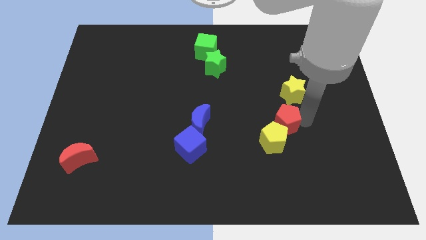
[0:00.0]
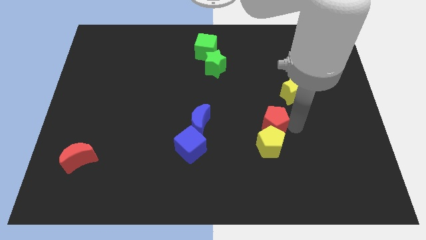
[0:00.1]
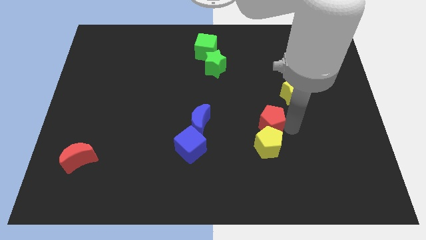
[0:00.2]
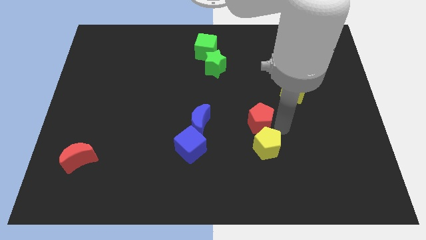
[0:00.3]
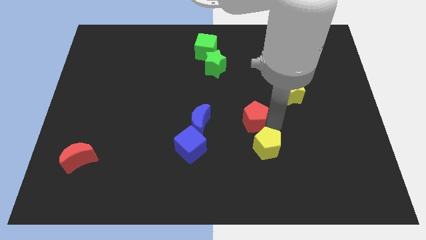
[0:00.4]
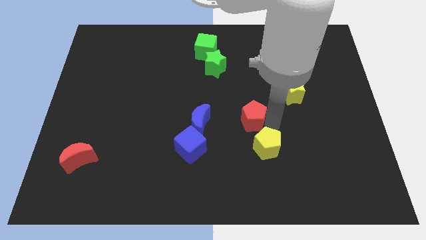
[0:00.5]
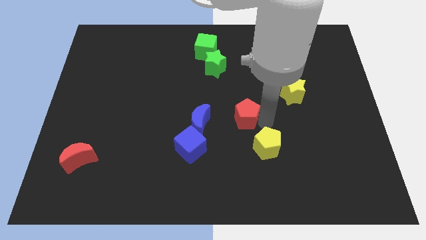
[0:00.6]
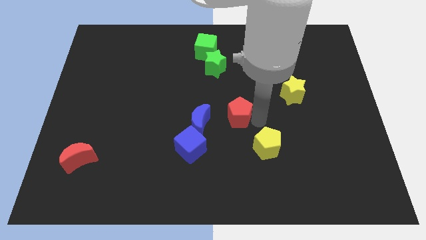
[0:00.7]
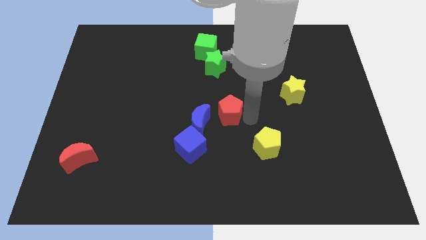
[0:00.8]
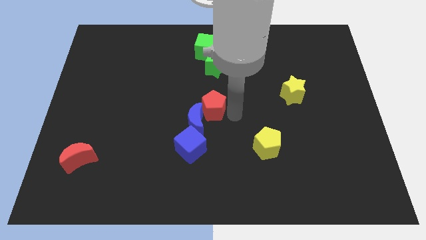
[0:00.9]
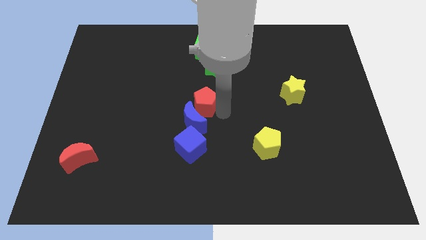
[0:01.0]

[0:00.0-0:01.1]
push the red pentagon to the top of the blue crescent

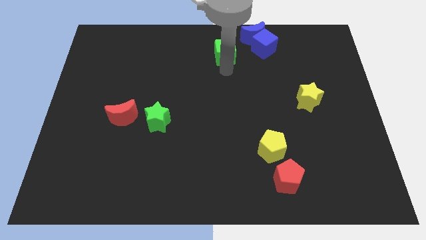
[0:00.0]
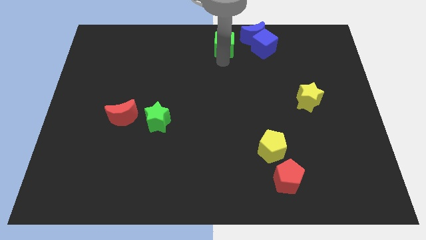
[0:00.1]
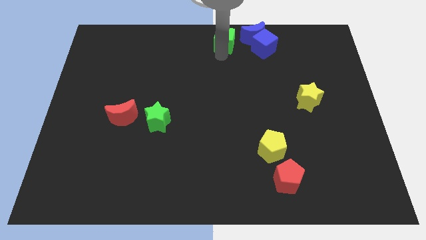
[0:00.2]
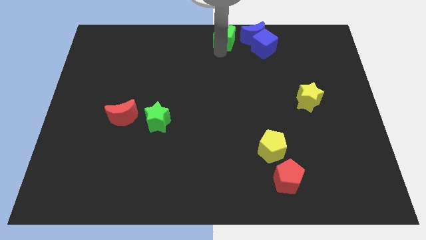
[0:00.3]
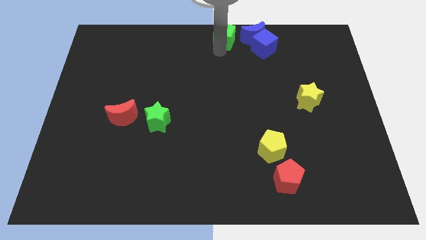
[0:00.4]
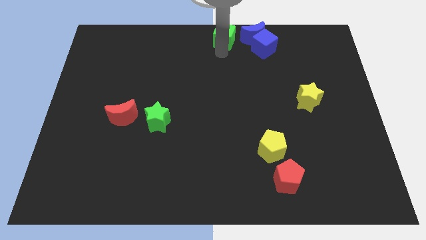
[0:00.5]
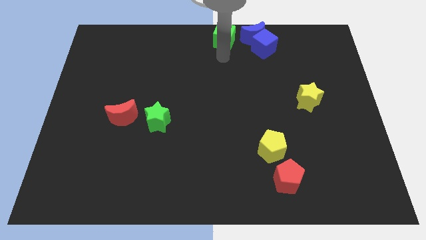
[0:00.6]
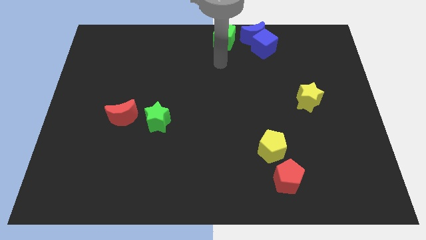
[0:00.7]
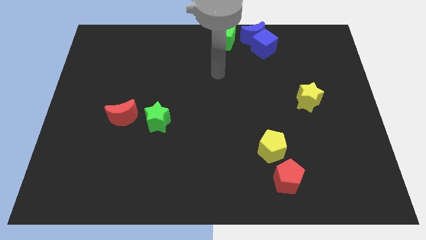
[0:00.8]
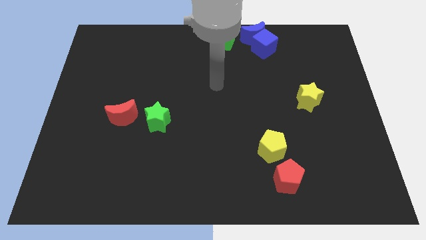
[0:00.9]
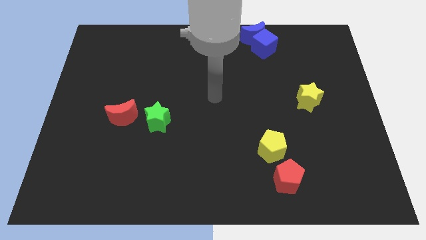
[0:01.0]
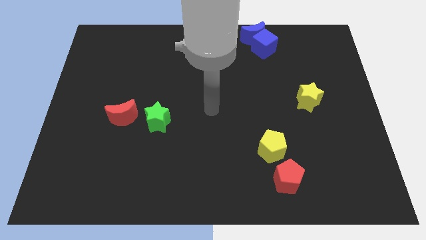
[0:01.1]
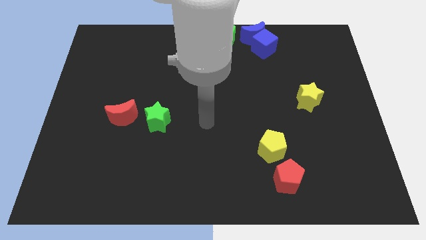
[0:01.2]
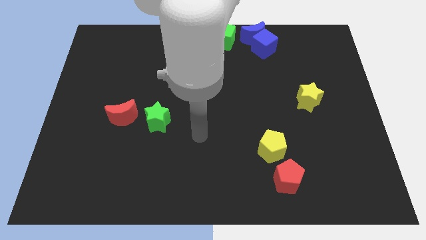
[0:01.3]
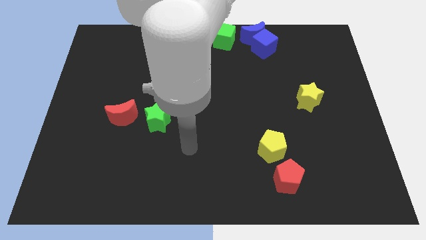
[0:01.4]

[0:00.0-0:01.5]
place the green cube to the left of blue moon

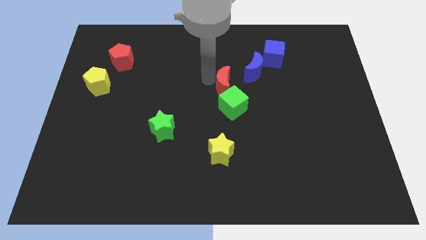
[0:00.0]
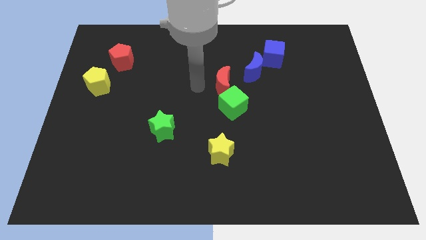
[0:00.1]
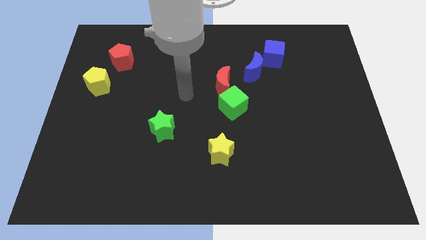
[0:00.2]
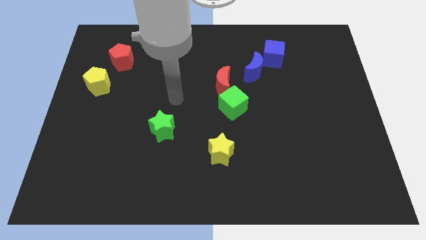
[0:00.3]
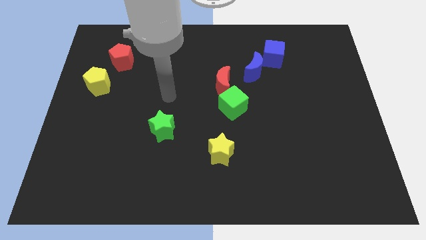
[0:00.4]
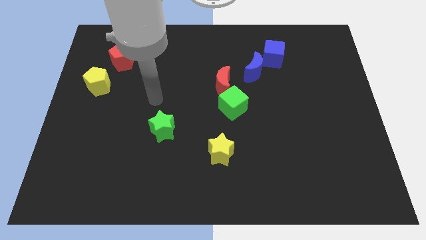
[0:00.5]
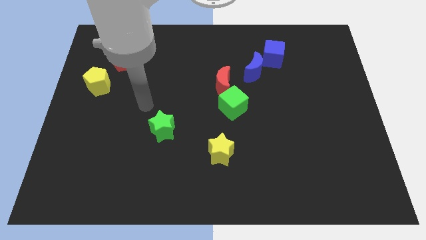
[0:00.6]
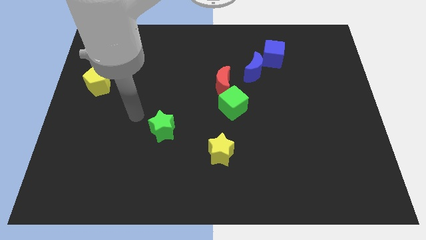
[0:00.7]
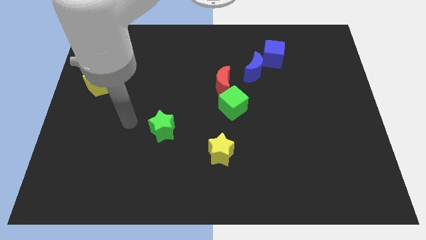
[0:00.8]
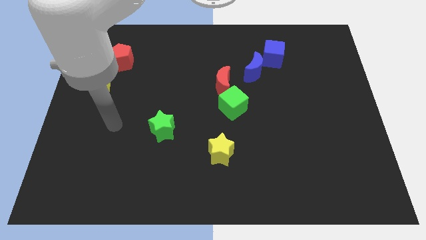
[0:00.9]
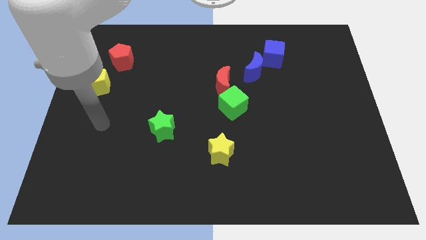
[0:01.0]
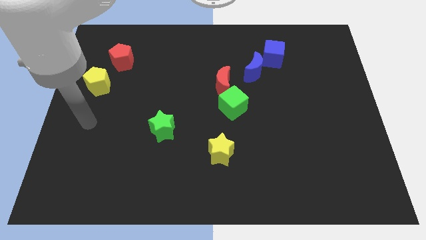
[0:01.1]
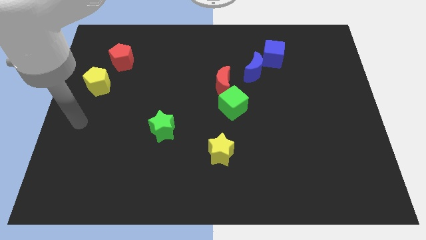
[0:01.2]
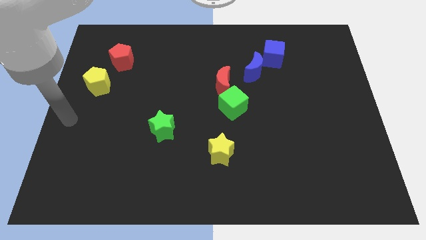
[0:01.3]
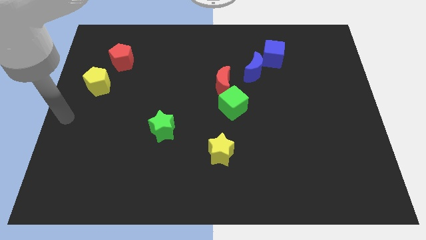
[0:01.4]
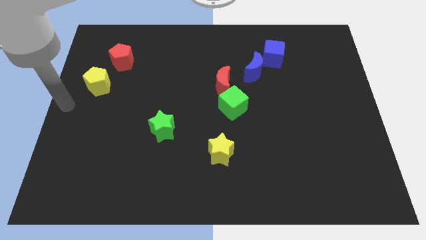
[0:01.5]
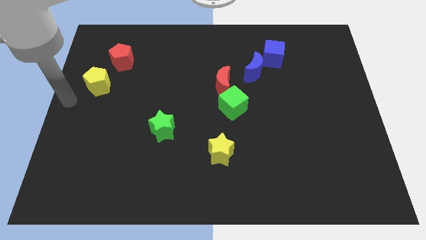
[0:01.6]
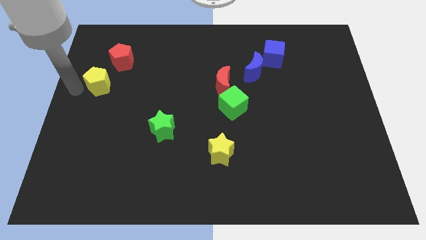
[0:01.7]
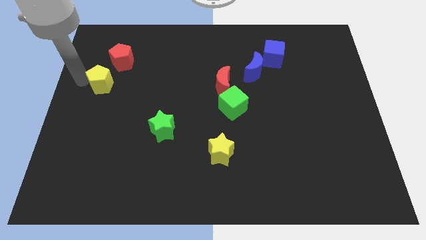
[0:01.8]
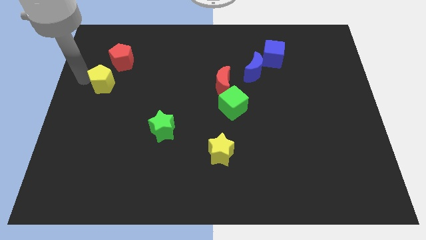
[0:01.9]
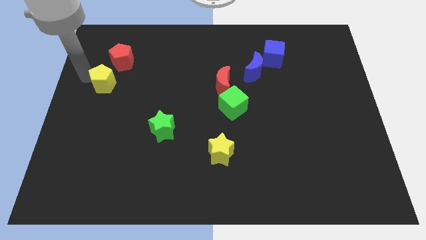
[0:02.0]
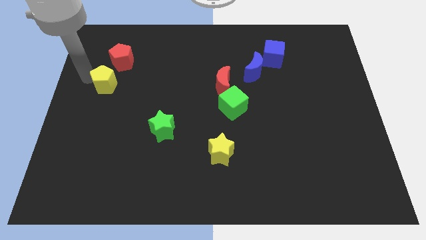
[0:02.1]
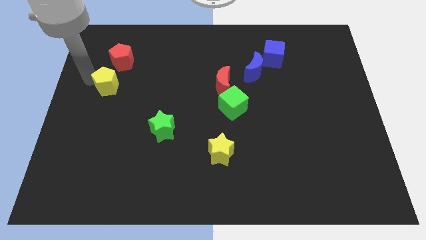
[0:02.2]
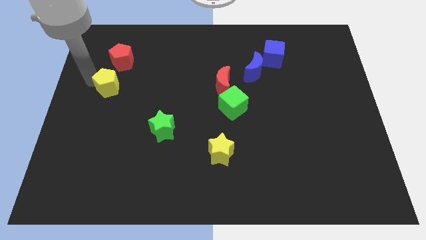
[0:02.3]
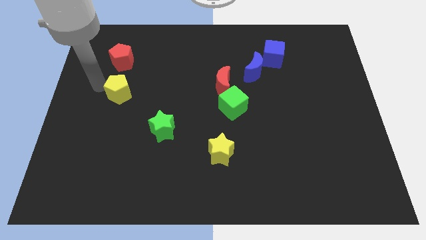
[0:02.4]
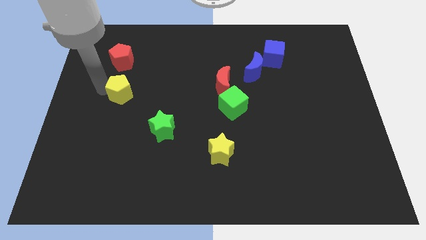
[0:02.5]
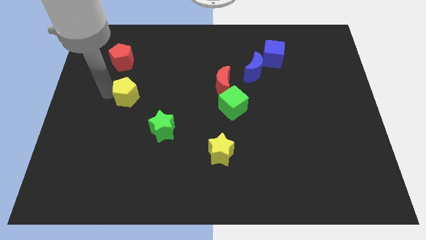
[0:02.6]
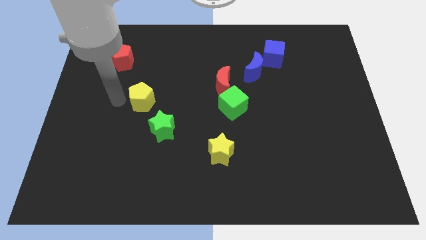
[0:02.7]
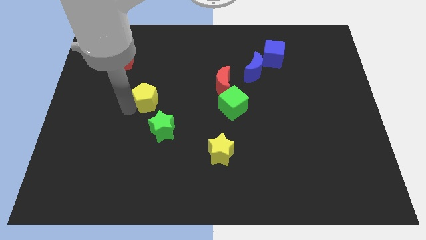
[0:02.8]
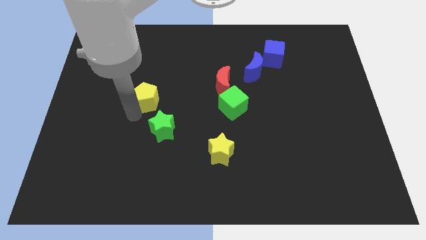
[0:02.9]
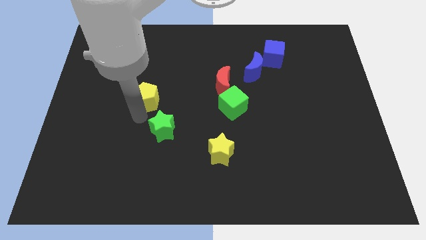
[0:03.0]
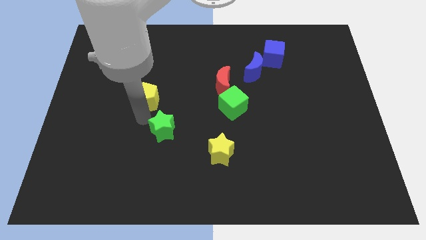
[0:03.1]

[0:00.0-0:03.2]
place yellow pentagon to the top left of green star

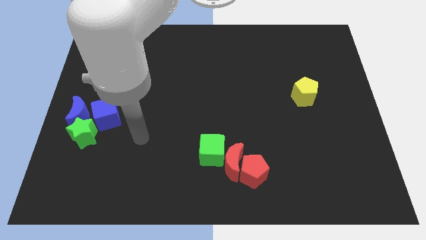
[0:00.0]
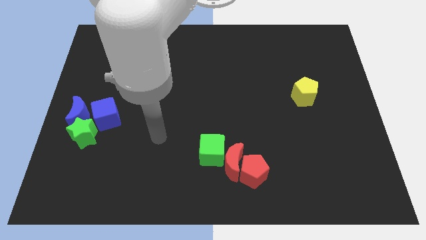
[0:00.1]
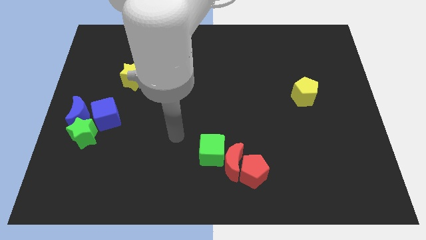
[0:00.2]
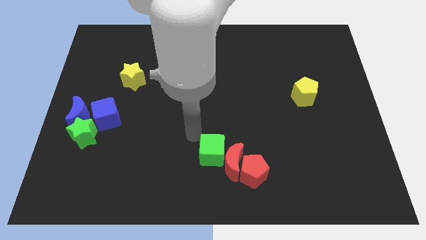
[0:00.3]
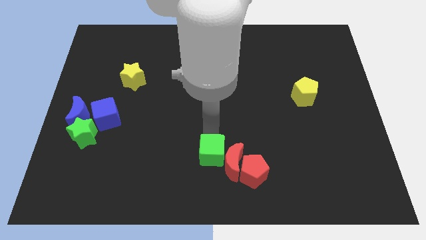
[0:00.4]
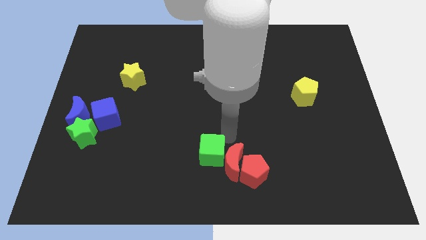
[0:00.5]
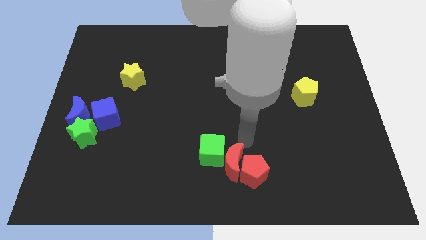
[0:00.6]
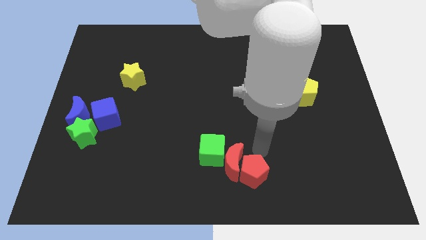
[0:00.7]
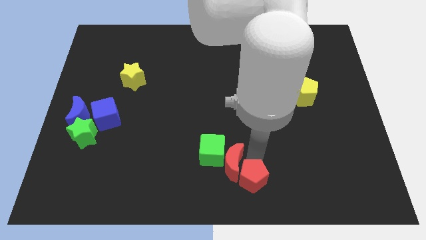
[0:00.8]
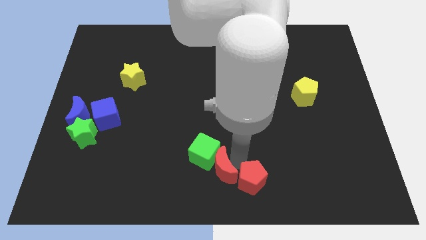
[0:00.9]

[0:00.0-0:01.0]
slightly push the red pentagon downwards of the board

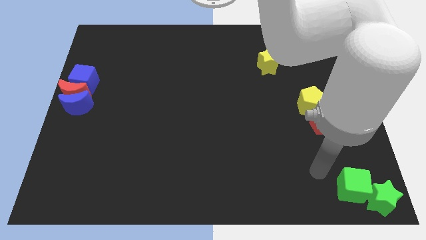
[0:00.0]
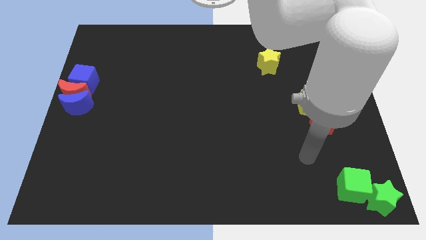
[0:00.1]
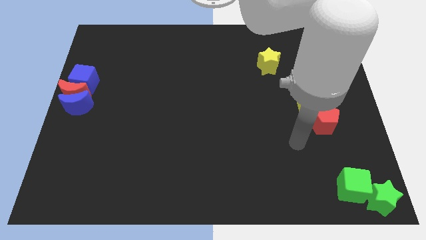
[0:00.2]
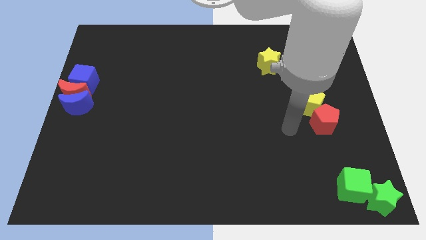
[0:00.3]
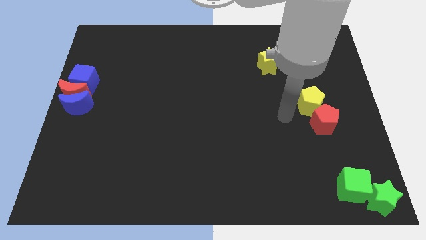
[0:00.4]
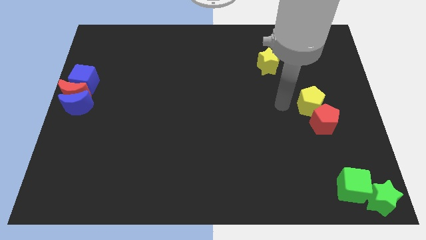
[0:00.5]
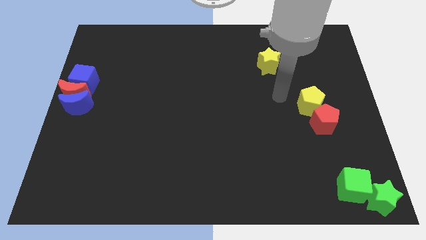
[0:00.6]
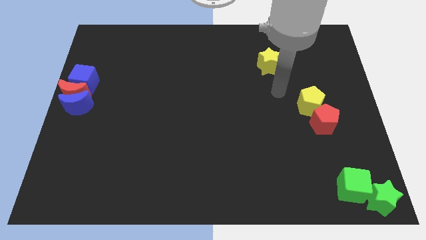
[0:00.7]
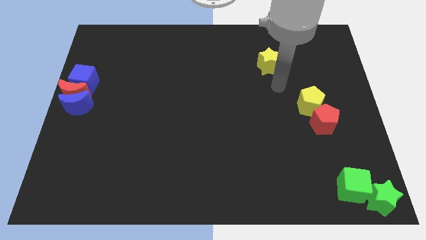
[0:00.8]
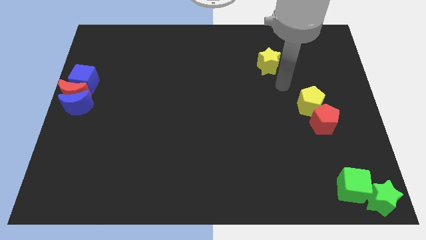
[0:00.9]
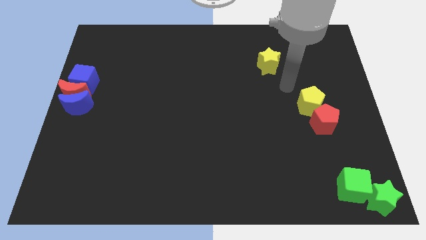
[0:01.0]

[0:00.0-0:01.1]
move the arm towards the top left of the yellow pentagon

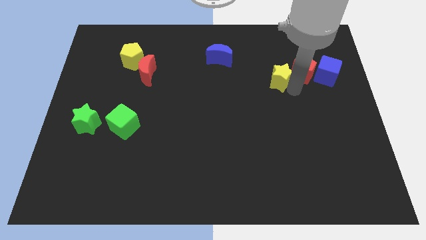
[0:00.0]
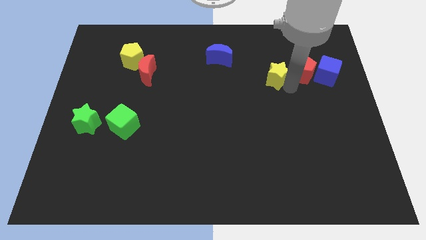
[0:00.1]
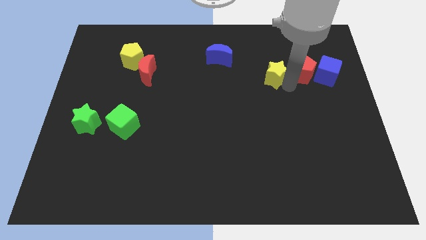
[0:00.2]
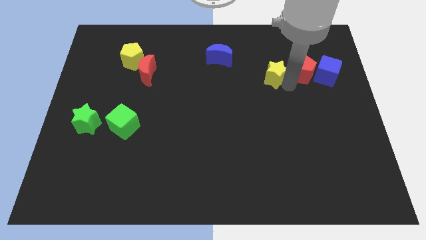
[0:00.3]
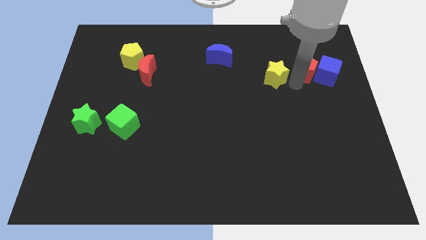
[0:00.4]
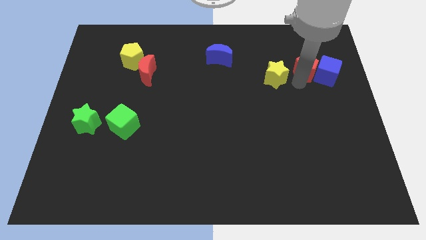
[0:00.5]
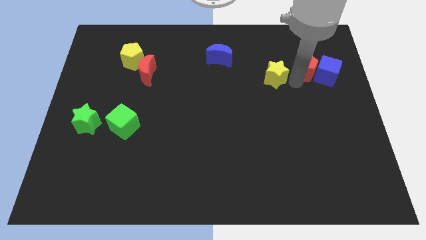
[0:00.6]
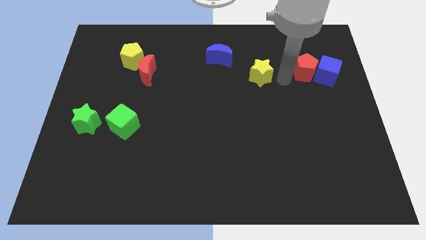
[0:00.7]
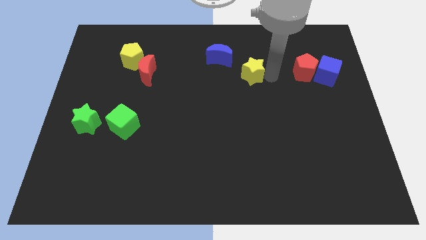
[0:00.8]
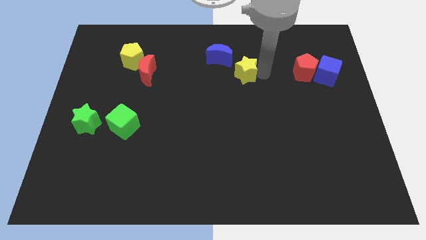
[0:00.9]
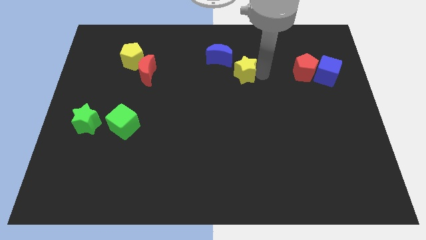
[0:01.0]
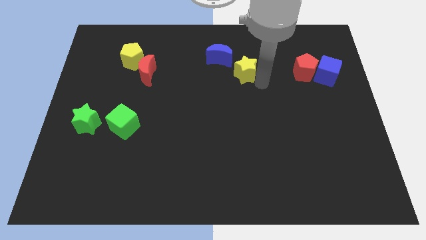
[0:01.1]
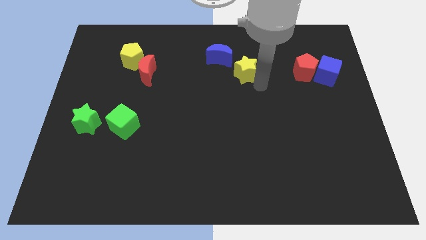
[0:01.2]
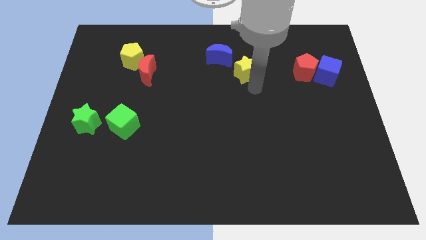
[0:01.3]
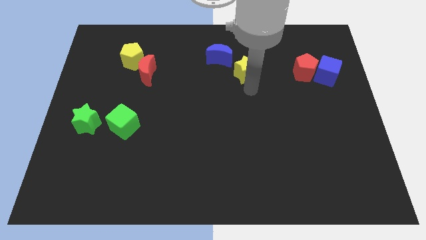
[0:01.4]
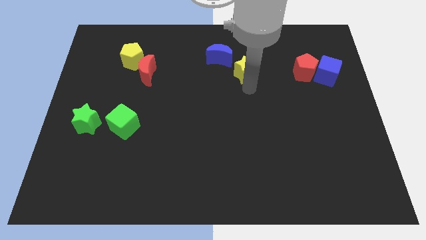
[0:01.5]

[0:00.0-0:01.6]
separate the yellow star from the red pentagon
